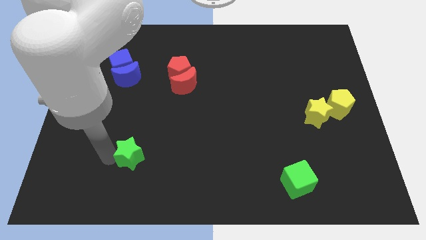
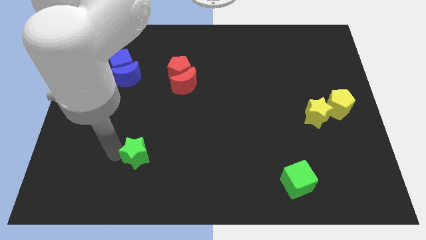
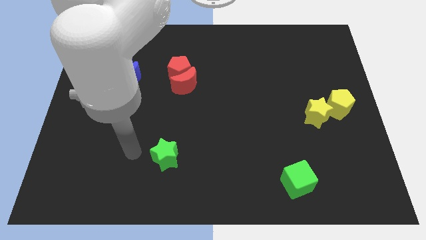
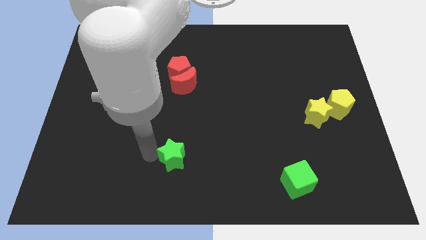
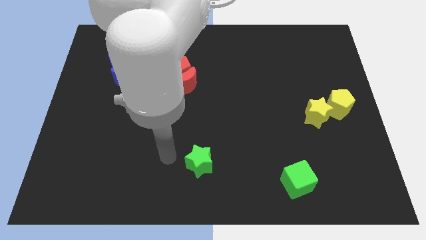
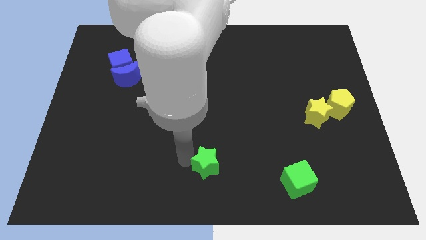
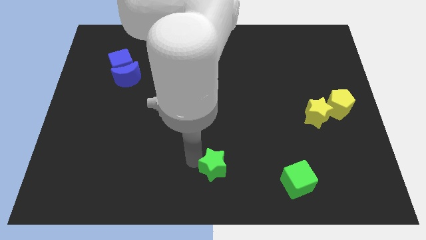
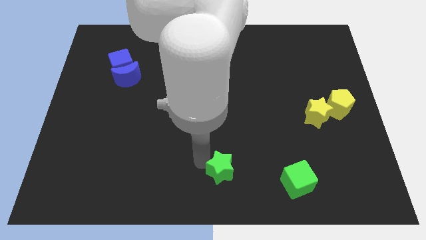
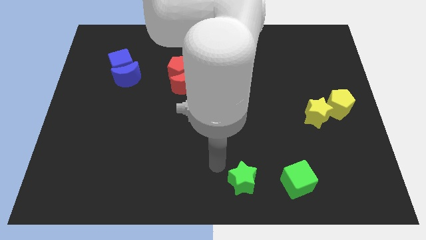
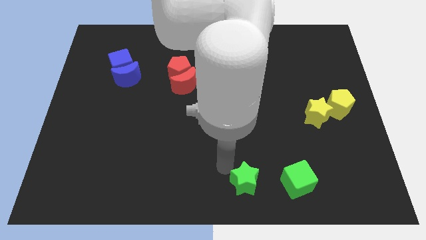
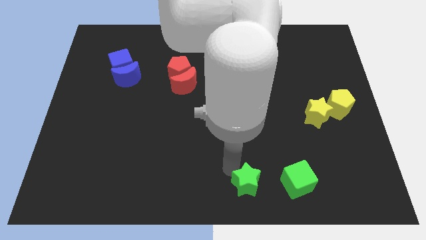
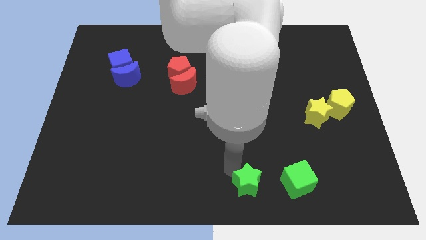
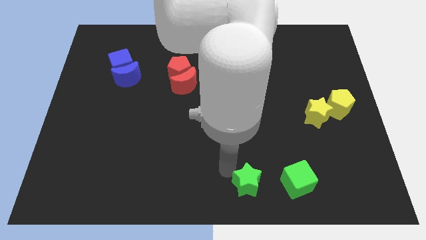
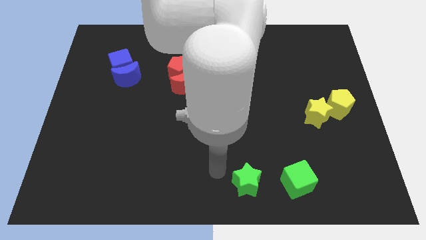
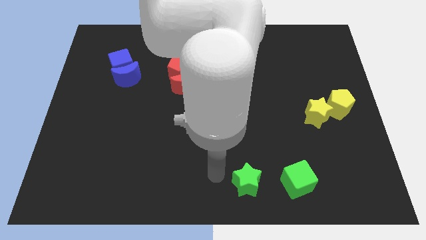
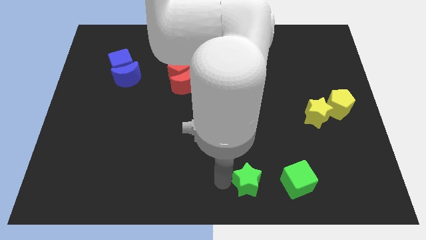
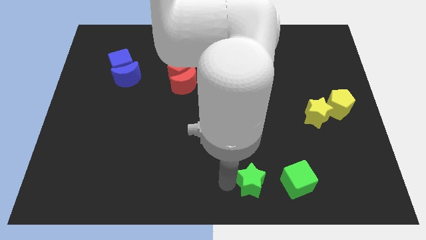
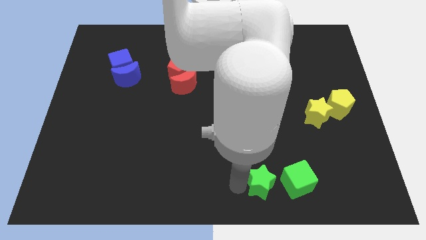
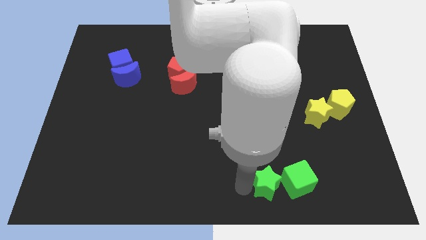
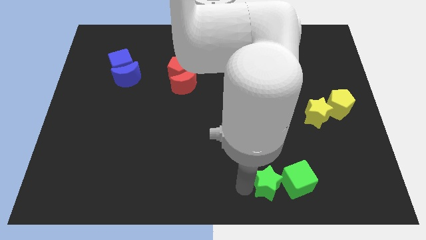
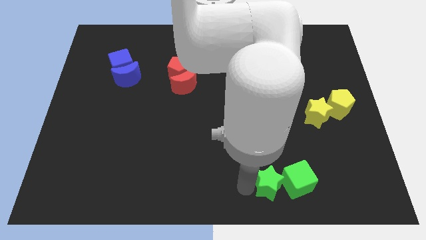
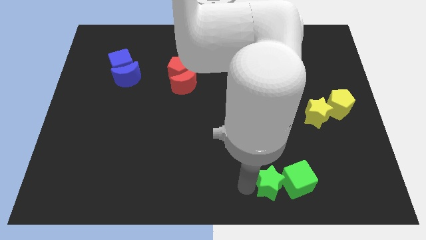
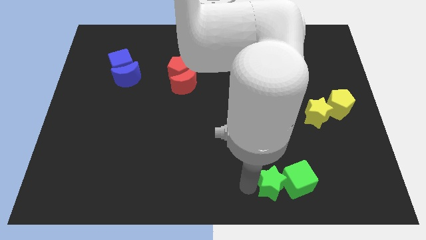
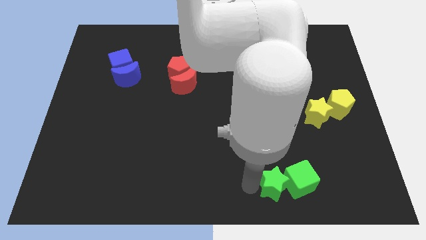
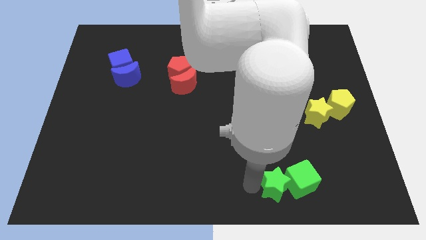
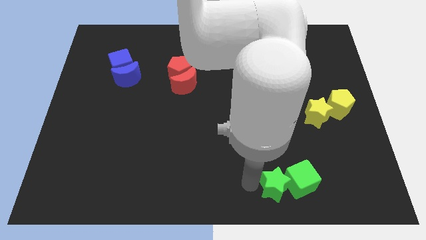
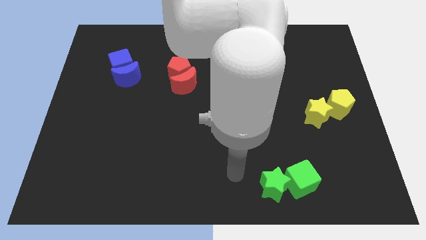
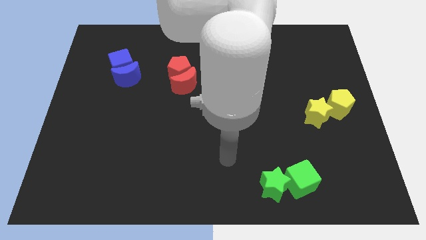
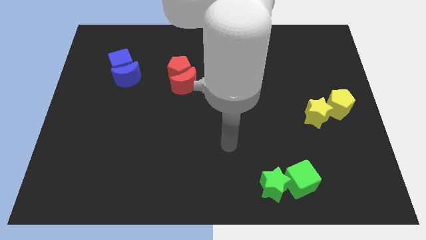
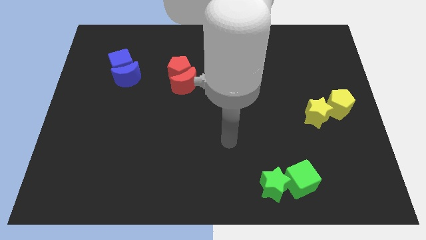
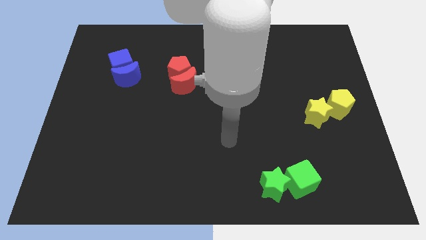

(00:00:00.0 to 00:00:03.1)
push the green star into the green cube

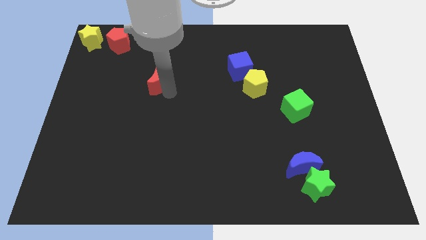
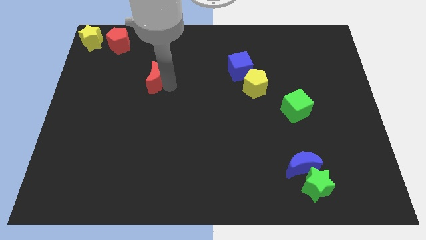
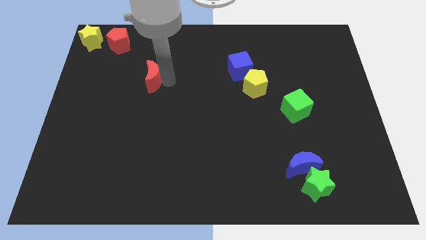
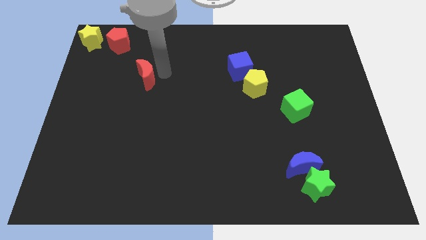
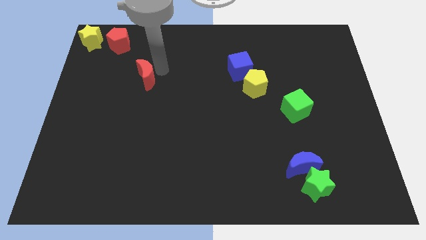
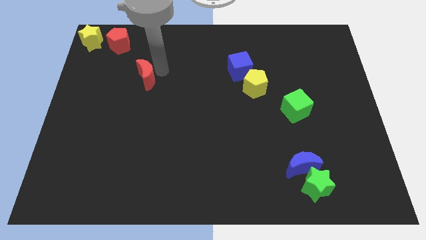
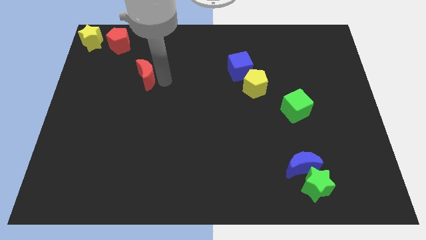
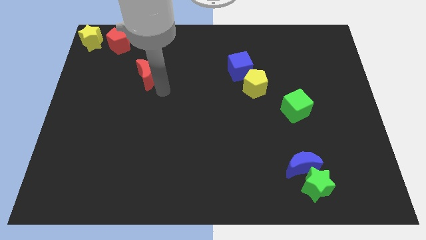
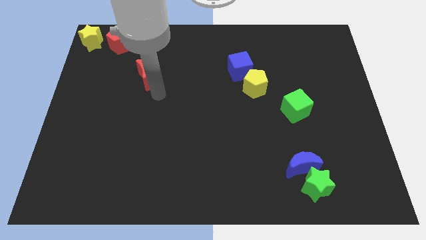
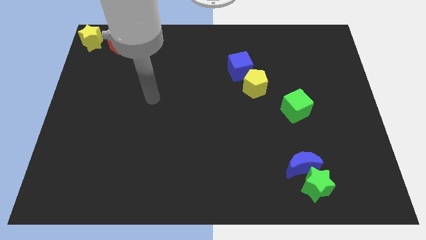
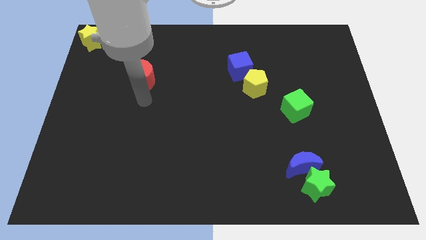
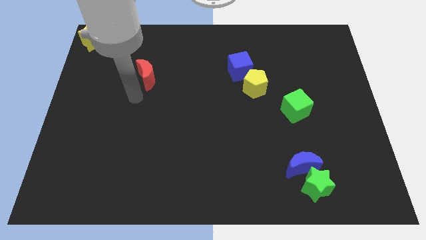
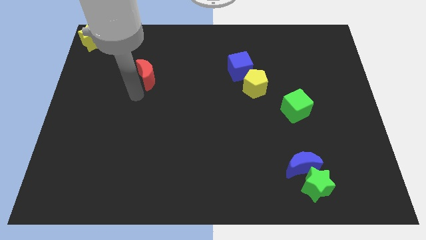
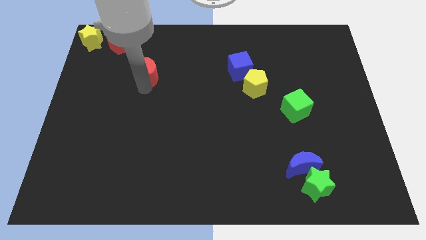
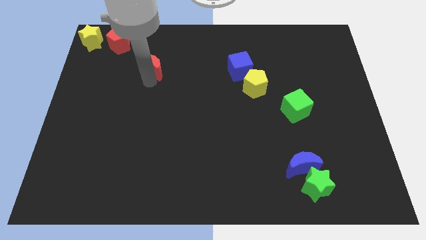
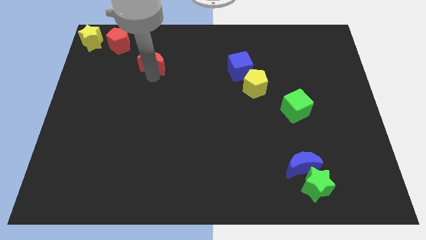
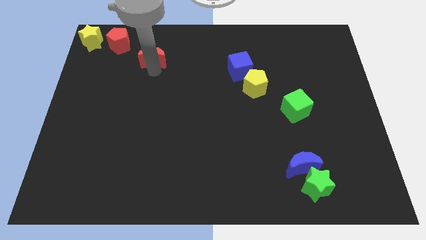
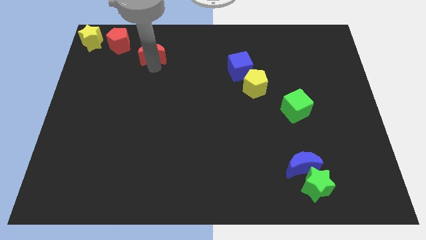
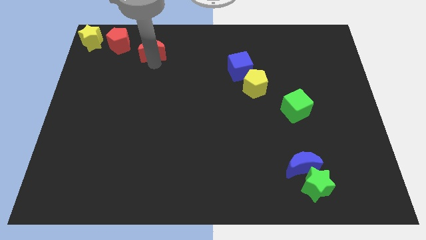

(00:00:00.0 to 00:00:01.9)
move the red crescent diagonal right bottom of the red pentagon

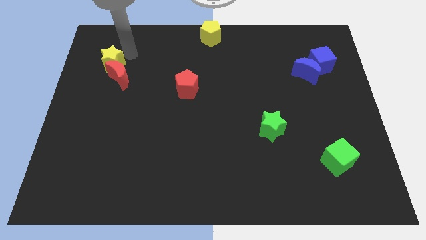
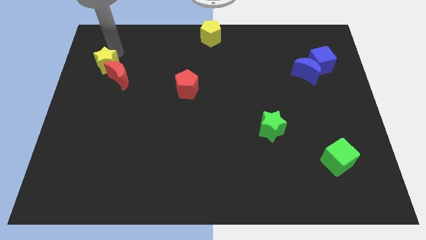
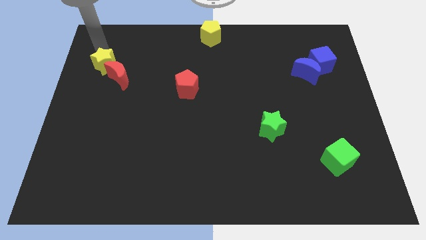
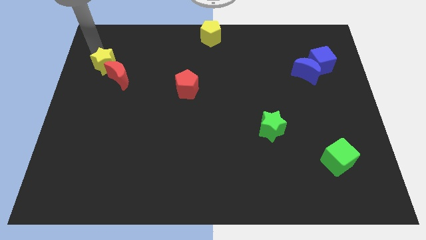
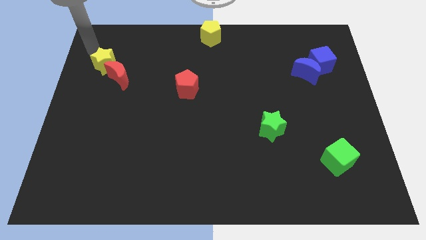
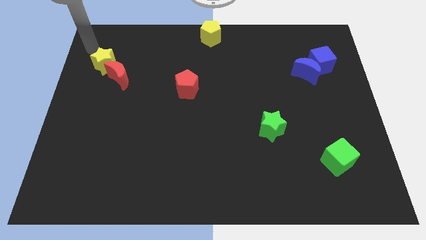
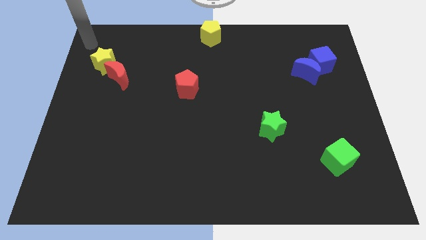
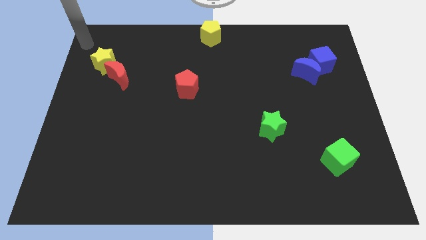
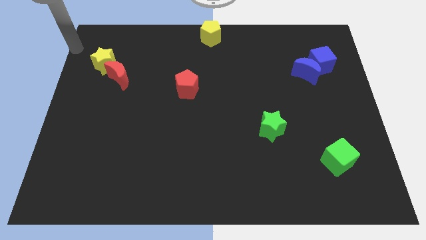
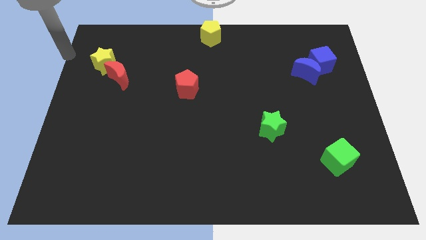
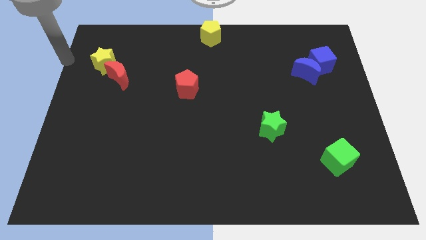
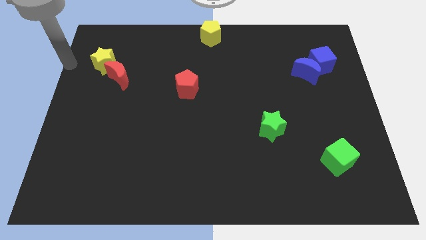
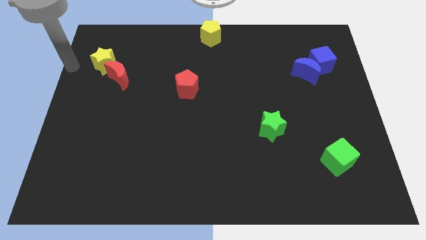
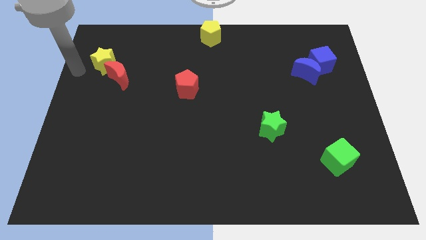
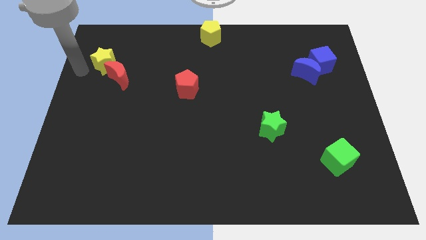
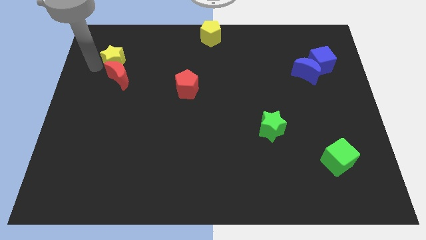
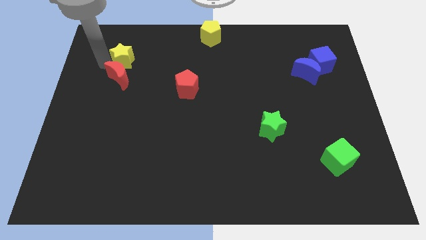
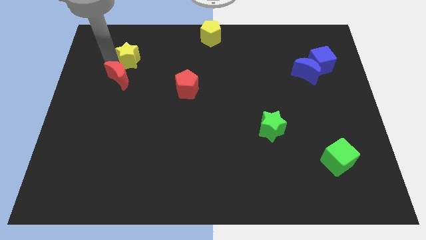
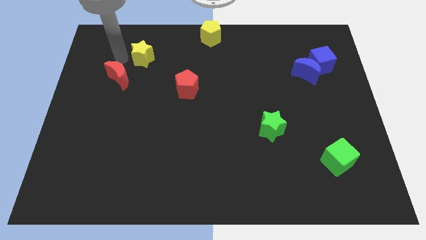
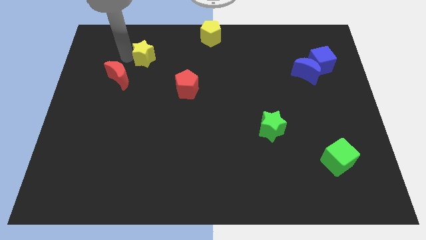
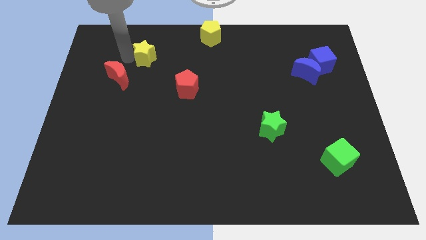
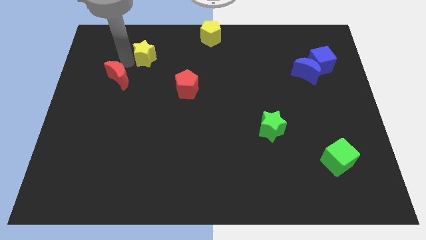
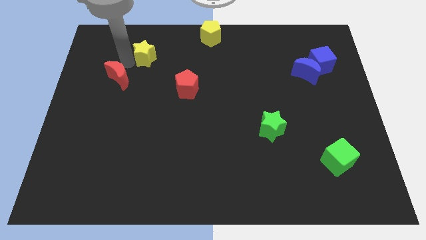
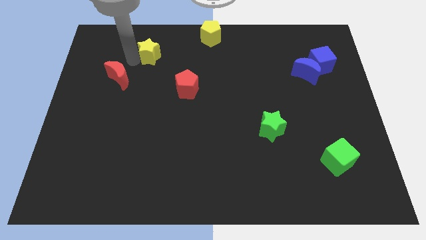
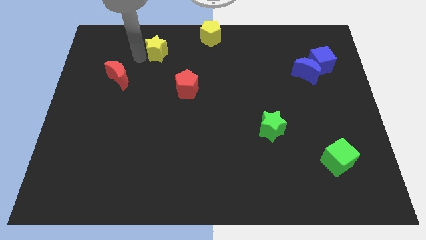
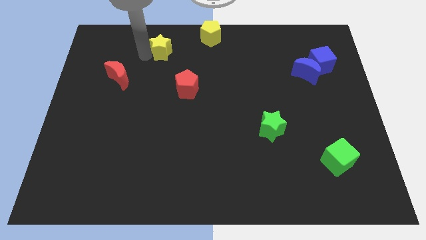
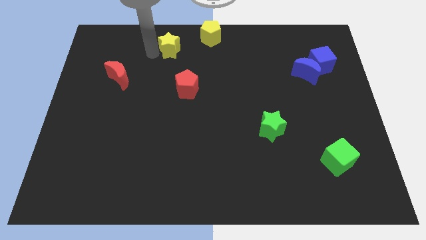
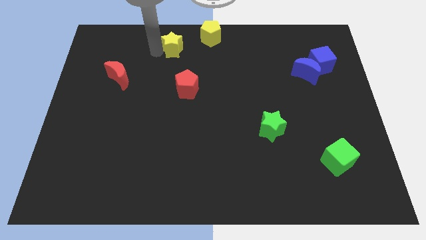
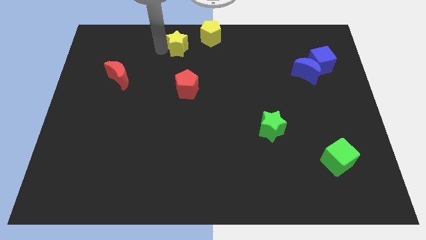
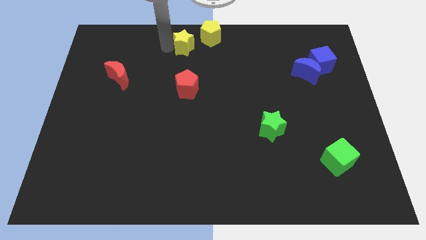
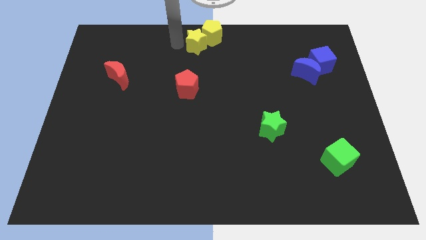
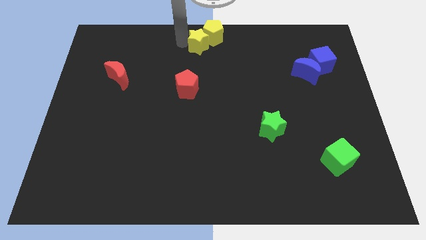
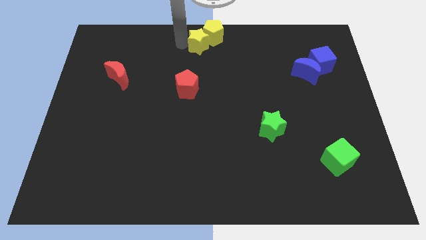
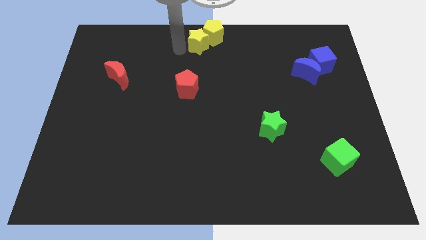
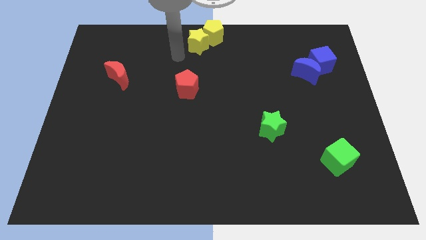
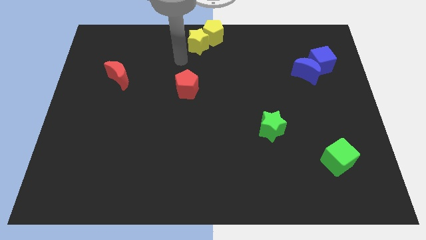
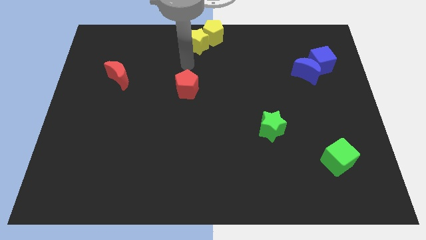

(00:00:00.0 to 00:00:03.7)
move yellow star close to yellow pentagon

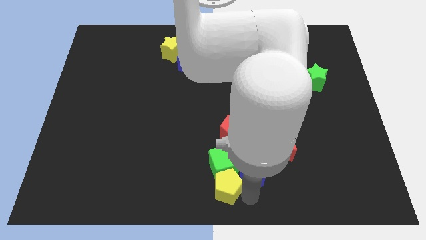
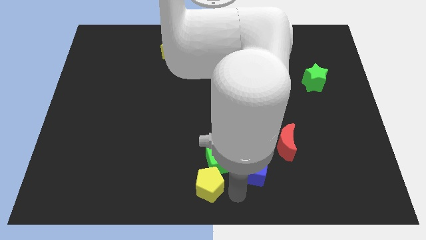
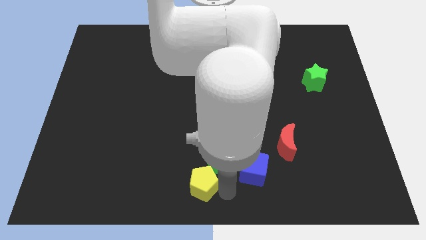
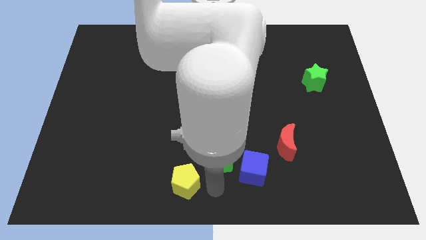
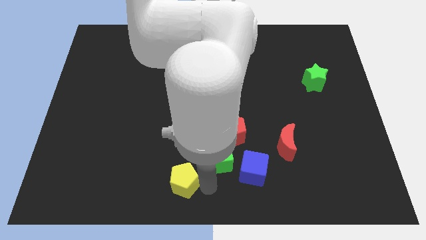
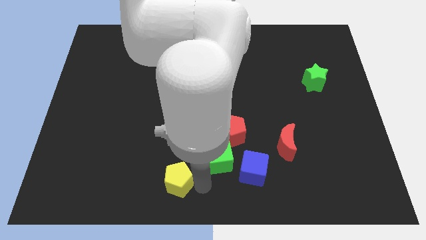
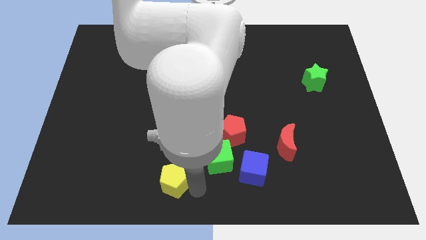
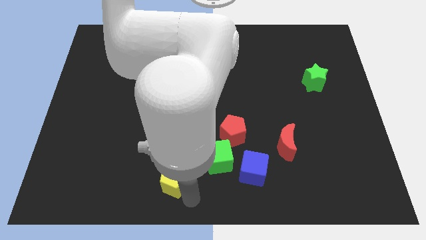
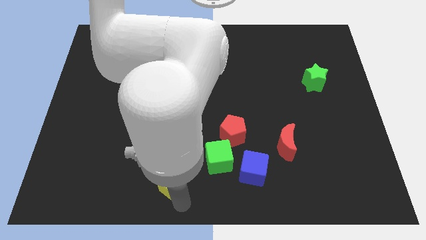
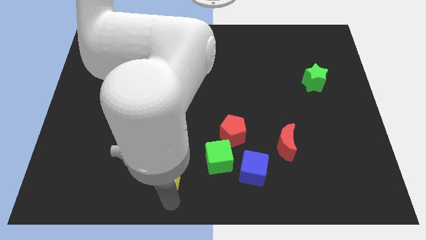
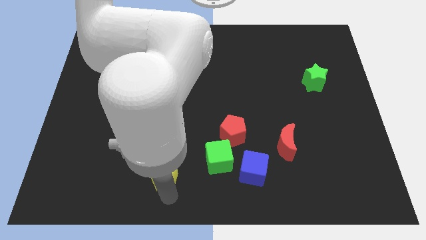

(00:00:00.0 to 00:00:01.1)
separate yellow pentagon from green cube
